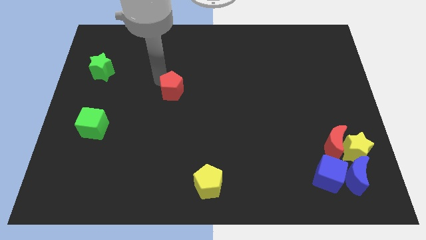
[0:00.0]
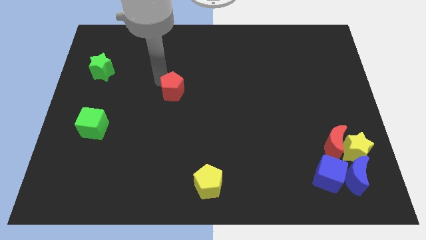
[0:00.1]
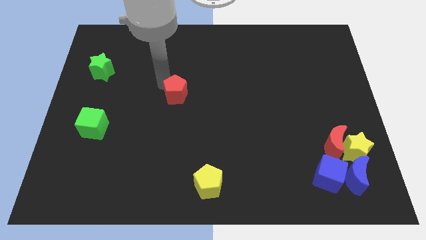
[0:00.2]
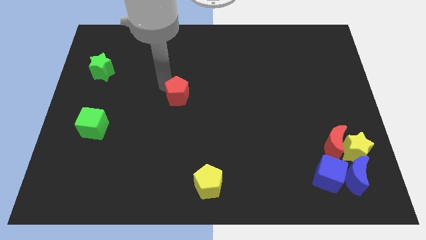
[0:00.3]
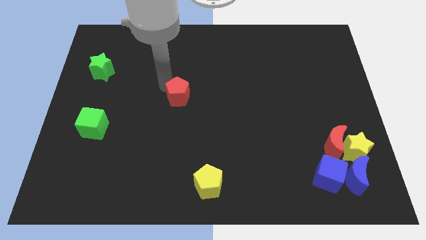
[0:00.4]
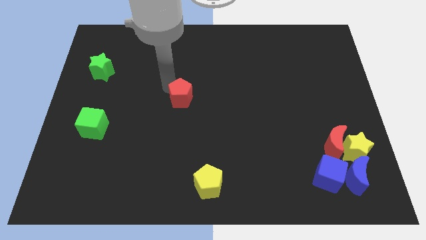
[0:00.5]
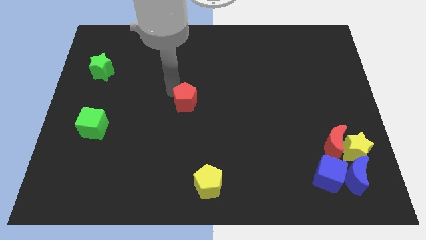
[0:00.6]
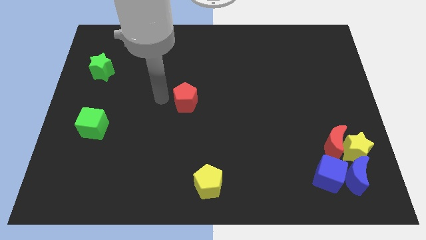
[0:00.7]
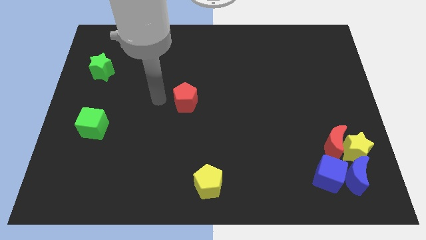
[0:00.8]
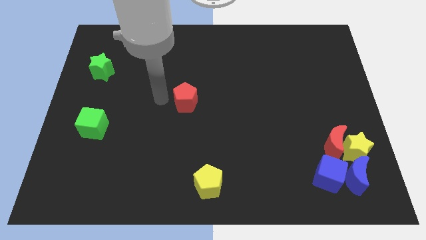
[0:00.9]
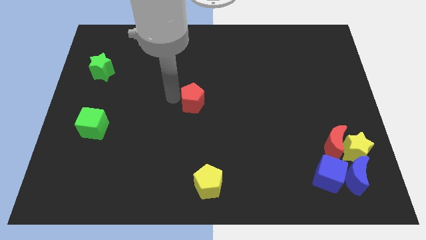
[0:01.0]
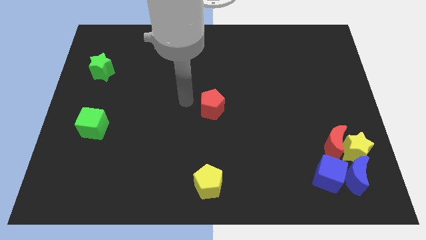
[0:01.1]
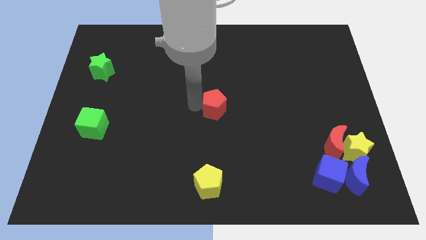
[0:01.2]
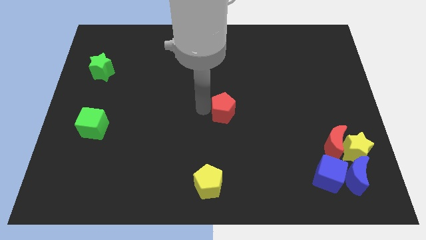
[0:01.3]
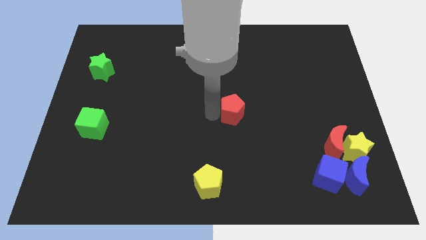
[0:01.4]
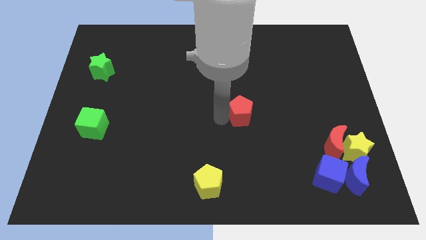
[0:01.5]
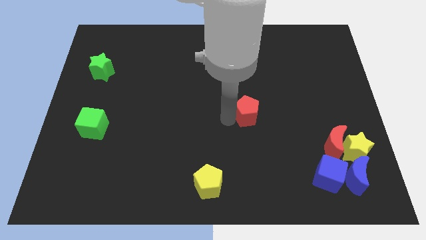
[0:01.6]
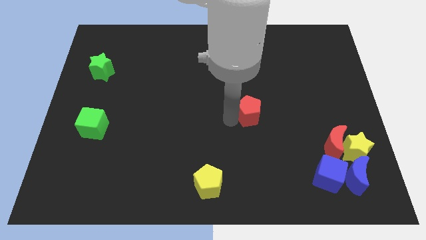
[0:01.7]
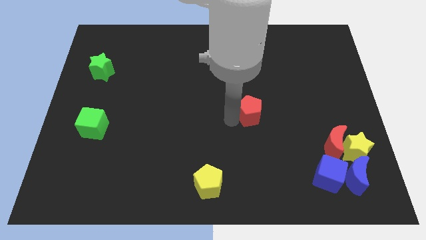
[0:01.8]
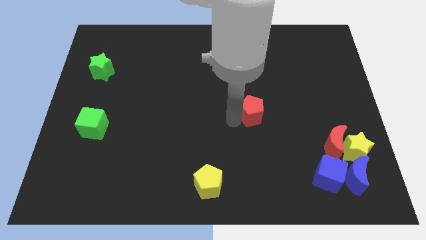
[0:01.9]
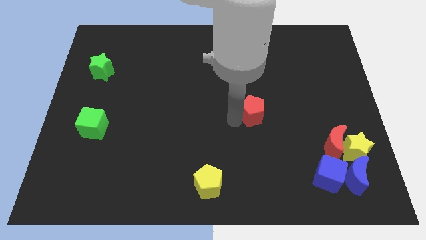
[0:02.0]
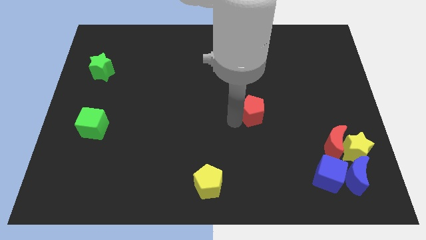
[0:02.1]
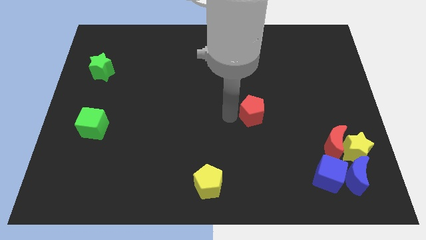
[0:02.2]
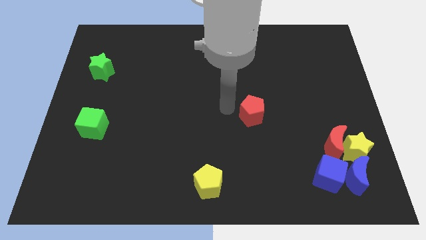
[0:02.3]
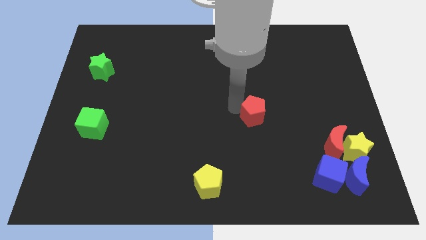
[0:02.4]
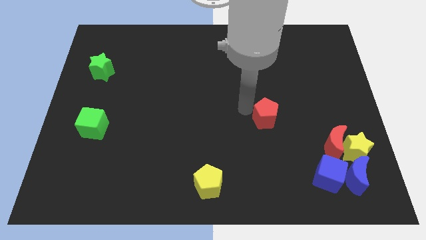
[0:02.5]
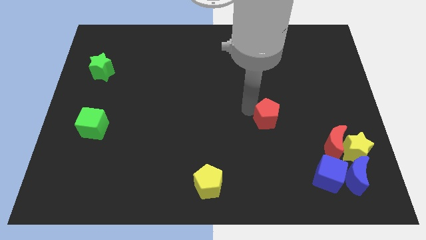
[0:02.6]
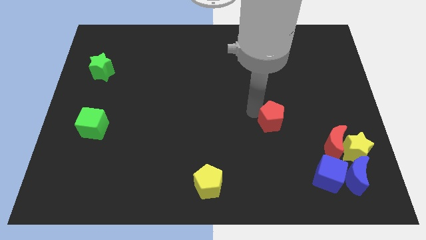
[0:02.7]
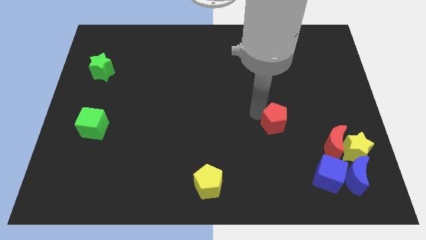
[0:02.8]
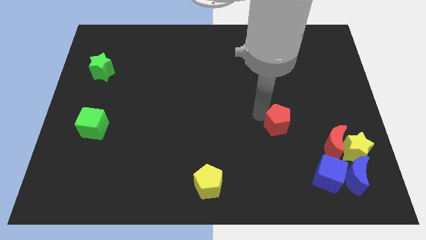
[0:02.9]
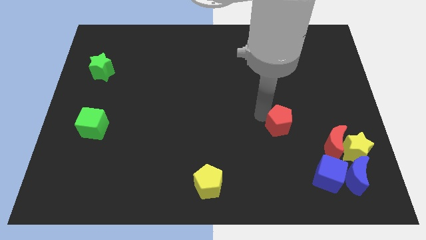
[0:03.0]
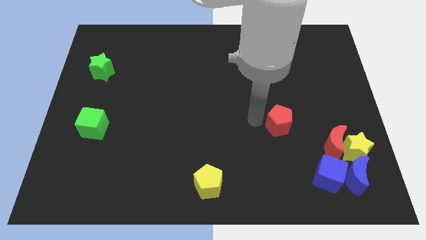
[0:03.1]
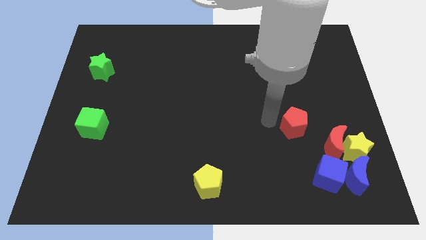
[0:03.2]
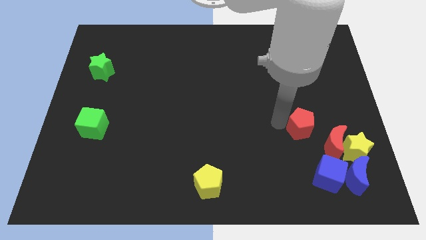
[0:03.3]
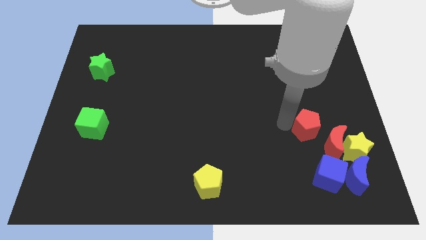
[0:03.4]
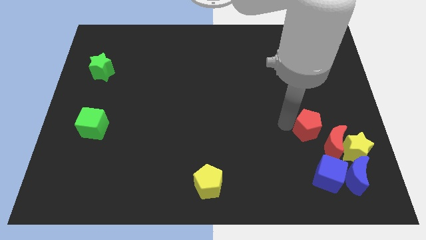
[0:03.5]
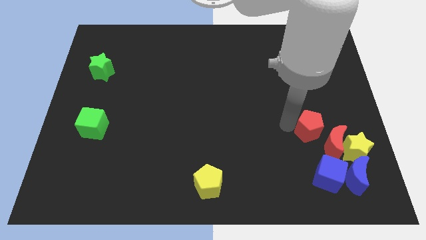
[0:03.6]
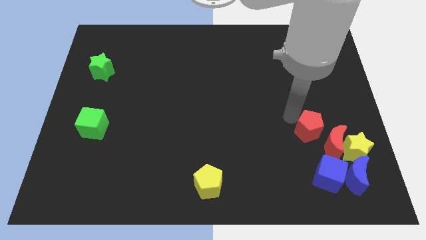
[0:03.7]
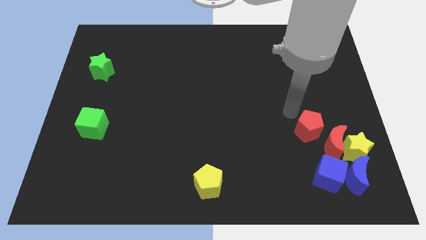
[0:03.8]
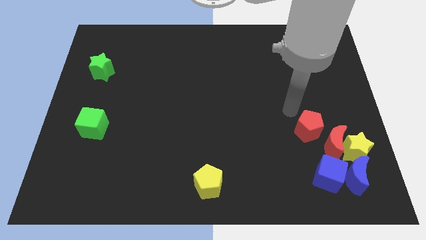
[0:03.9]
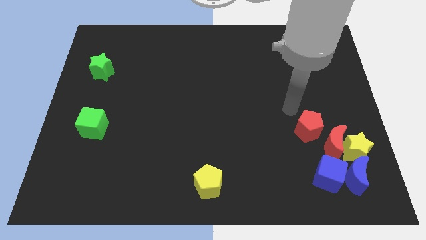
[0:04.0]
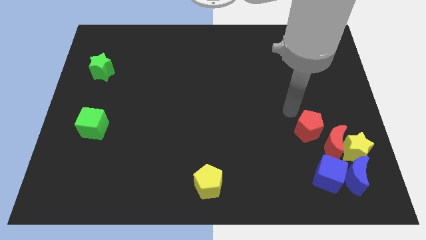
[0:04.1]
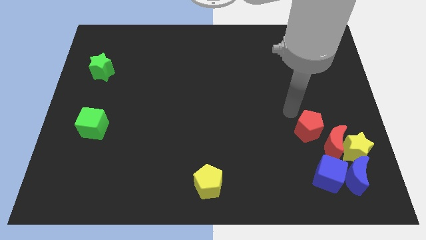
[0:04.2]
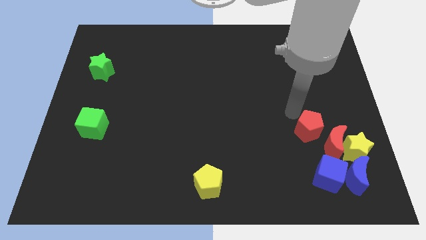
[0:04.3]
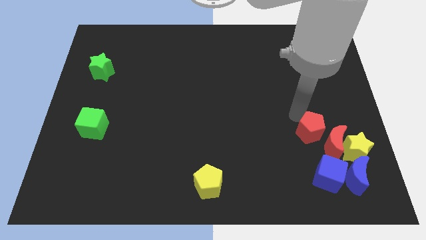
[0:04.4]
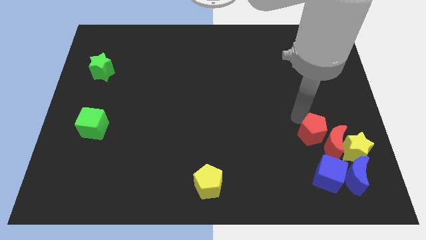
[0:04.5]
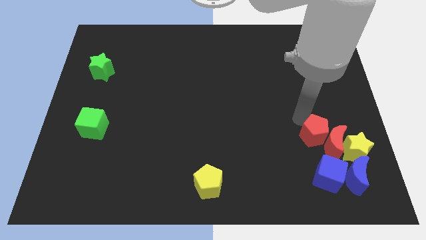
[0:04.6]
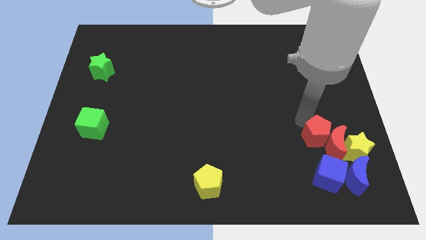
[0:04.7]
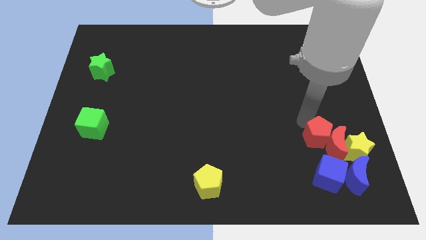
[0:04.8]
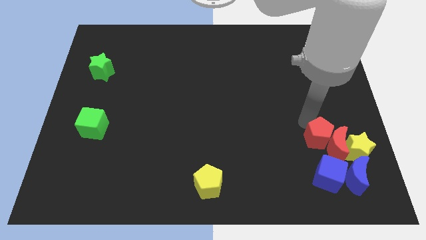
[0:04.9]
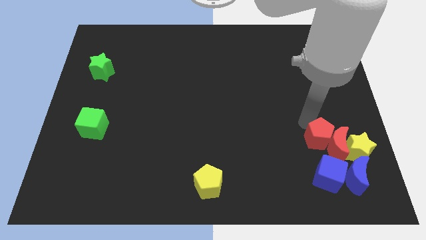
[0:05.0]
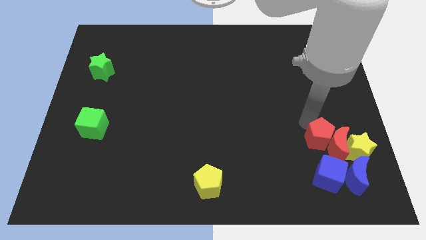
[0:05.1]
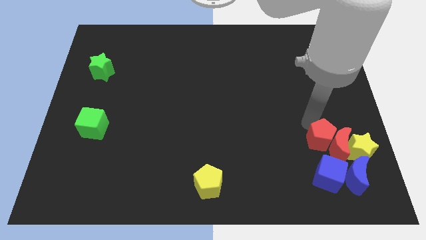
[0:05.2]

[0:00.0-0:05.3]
move red pentagon into red crescent

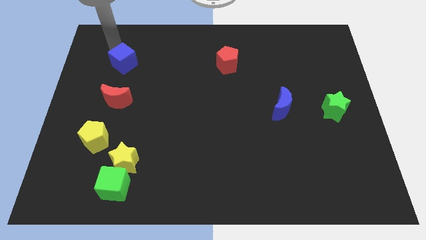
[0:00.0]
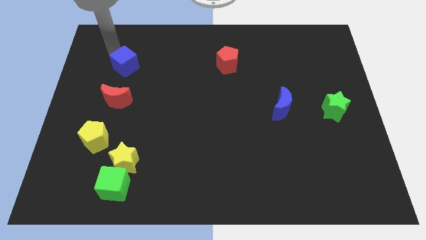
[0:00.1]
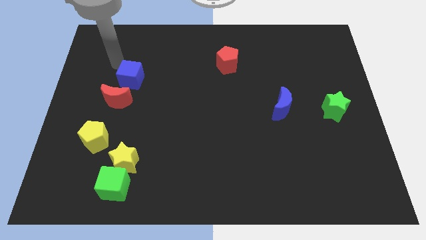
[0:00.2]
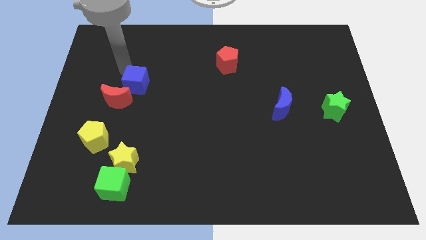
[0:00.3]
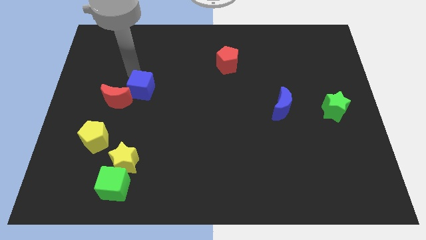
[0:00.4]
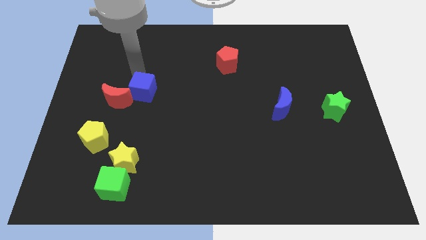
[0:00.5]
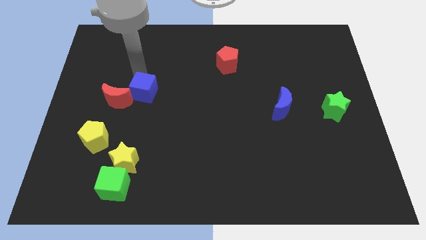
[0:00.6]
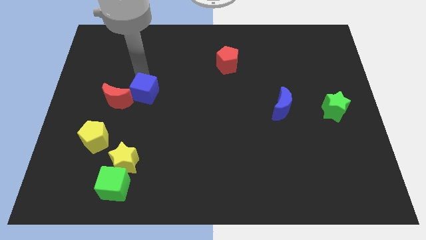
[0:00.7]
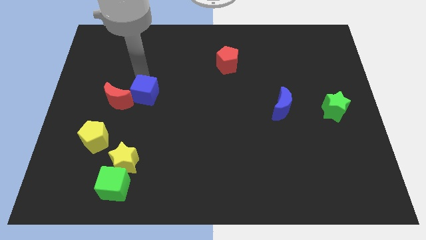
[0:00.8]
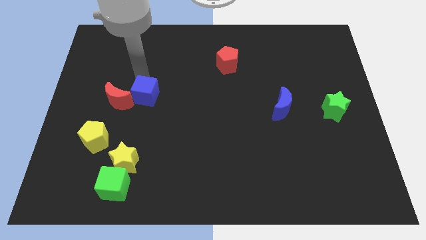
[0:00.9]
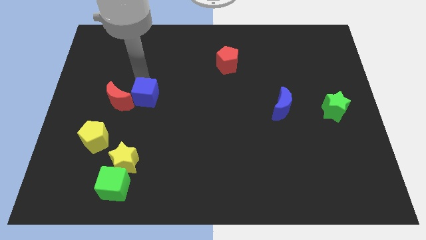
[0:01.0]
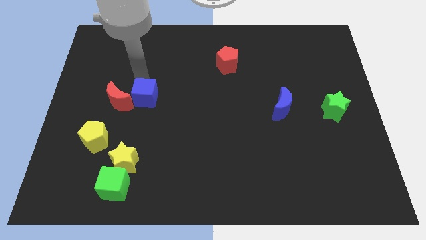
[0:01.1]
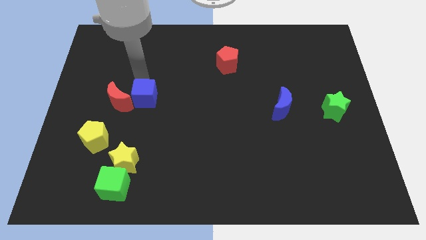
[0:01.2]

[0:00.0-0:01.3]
push the blue cube to the right of the red crescent

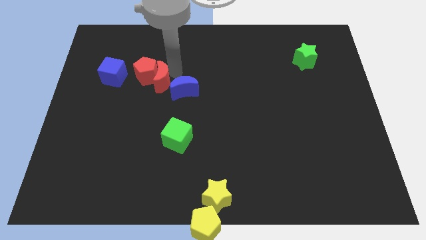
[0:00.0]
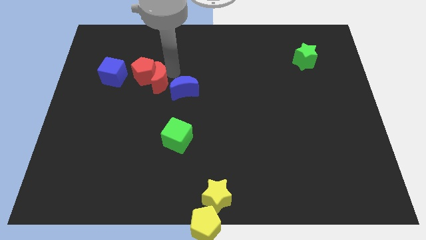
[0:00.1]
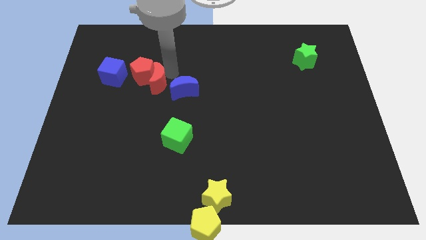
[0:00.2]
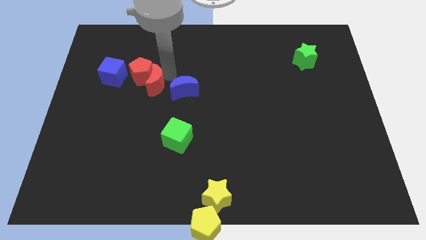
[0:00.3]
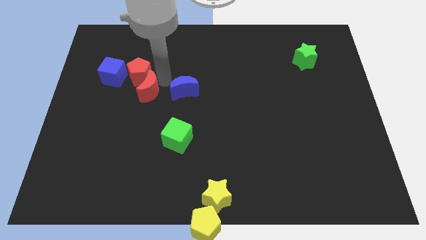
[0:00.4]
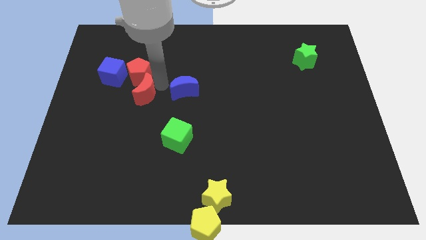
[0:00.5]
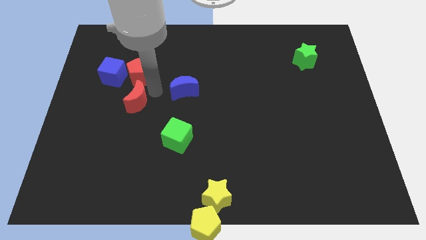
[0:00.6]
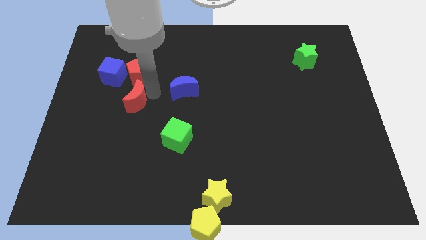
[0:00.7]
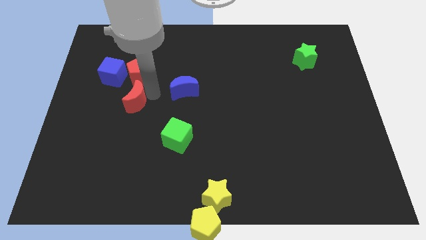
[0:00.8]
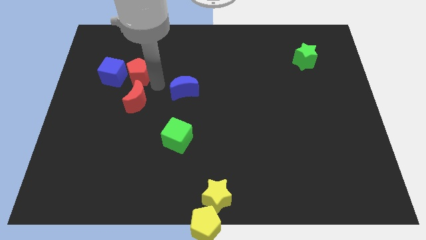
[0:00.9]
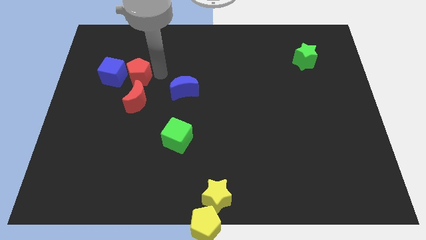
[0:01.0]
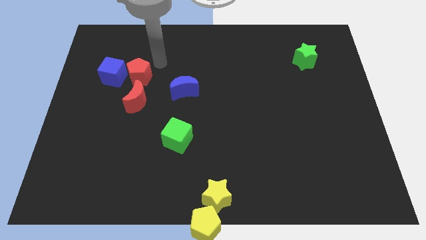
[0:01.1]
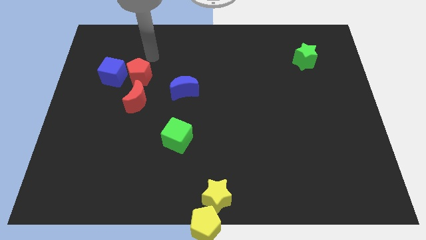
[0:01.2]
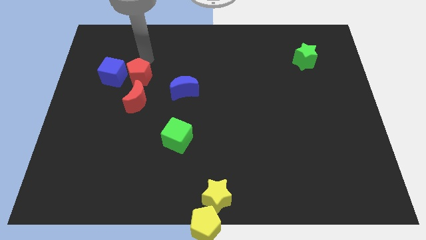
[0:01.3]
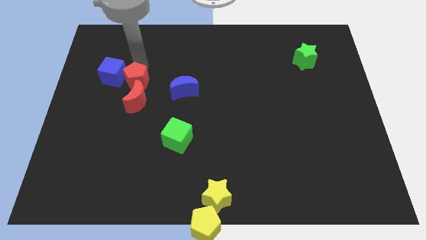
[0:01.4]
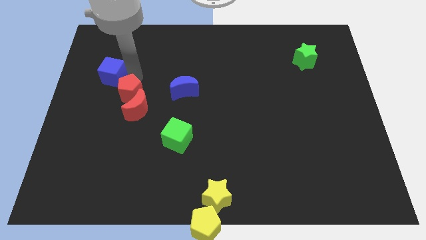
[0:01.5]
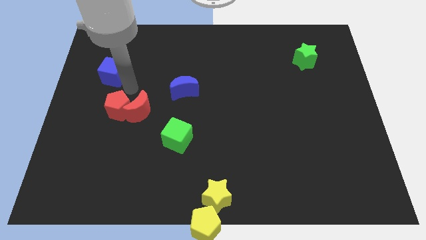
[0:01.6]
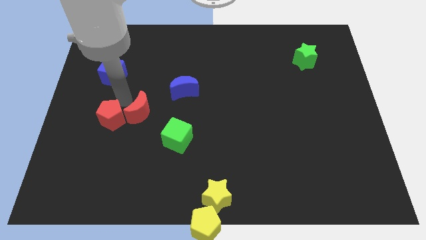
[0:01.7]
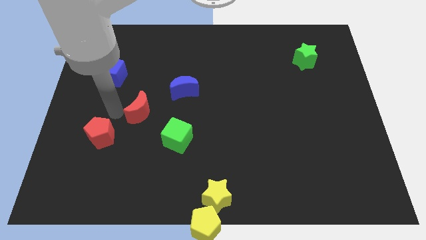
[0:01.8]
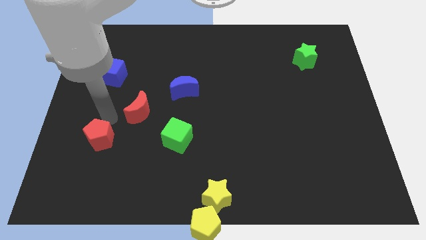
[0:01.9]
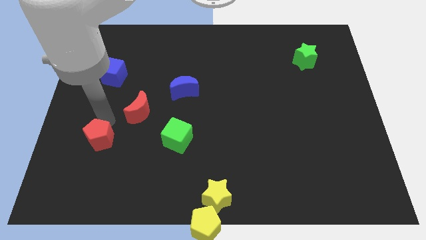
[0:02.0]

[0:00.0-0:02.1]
push two red blocks

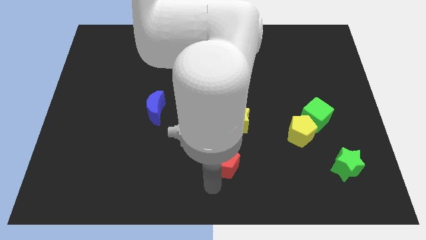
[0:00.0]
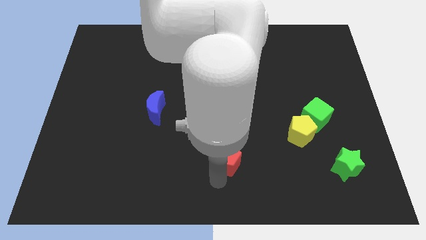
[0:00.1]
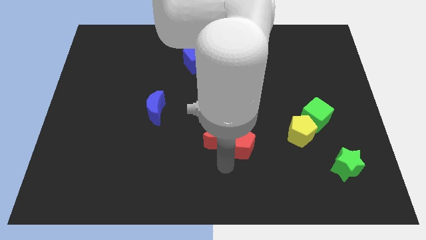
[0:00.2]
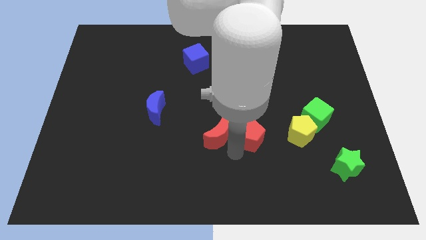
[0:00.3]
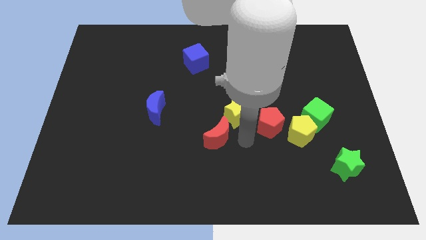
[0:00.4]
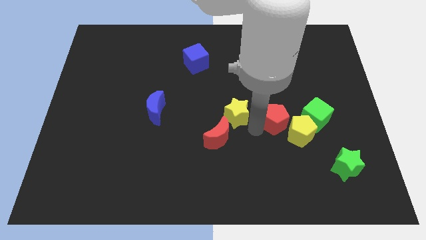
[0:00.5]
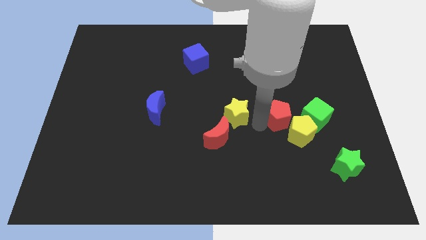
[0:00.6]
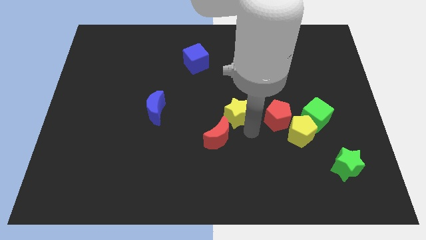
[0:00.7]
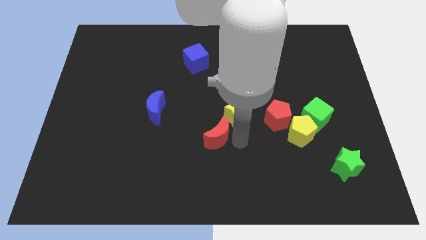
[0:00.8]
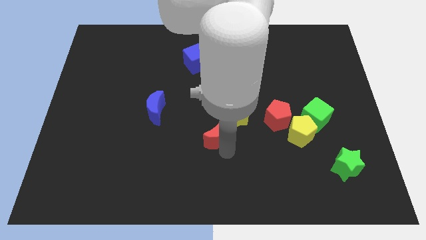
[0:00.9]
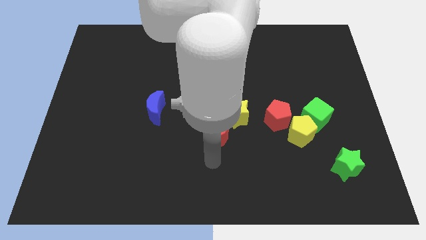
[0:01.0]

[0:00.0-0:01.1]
place the red pentagon right to the yellow star
